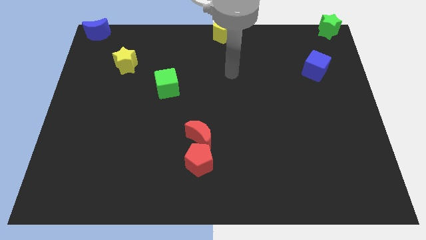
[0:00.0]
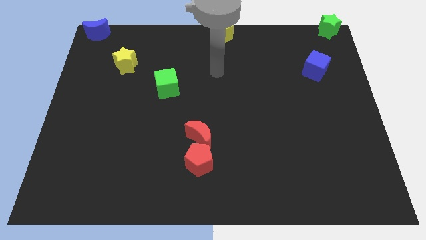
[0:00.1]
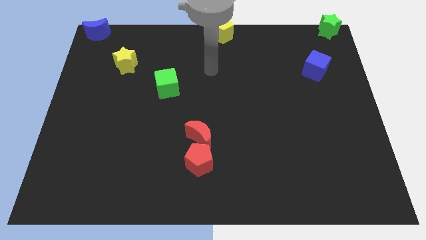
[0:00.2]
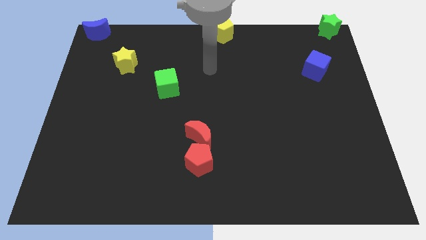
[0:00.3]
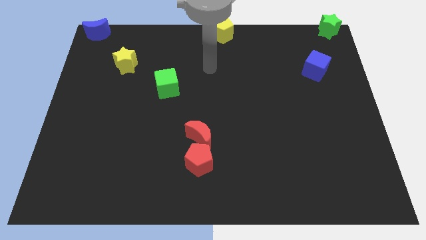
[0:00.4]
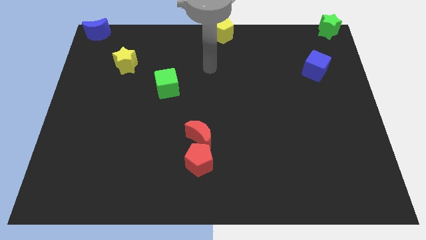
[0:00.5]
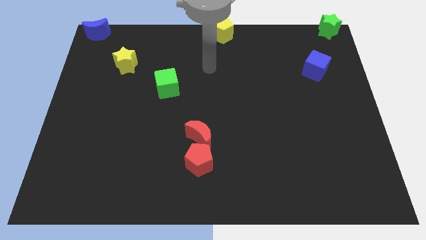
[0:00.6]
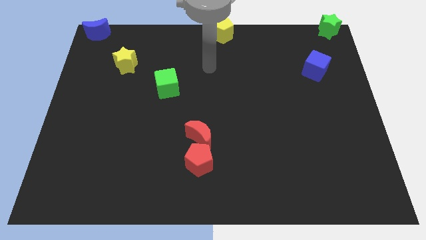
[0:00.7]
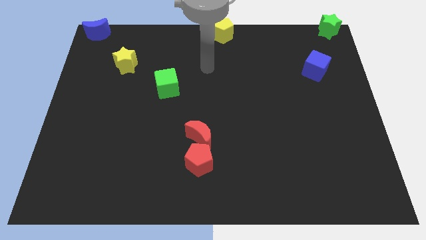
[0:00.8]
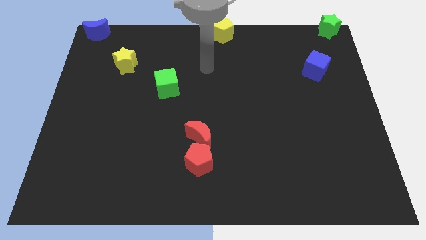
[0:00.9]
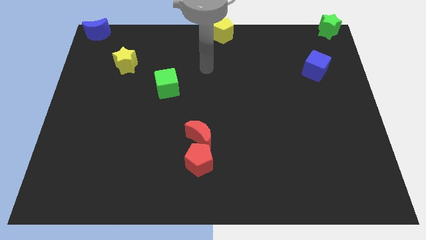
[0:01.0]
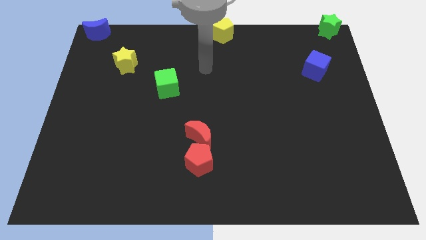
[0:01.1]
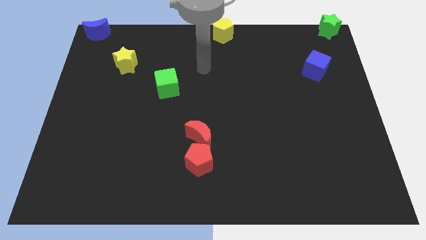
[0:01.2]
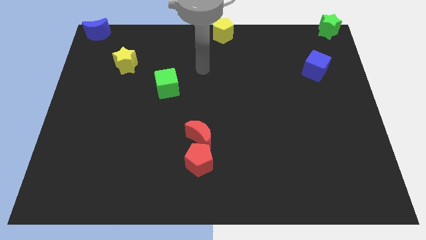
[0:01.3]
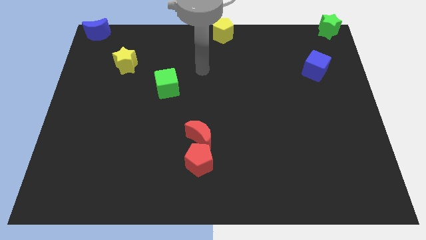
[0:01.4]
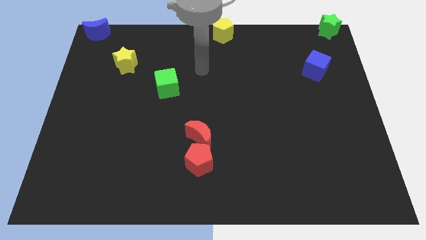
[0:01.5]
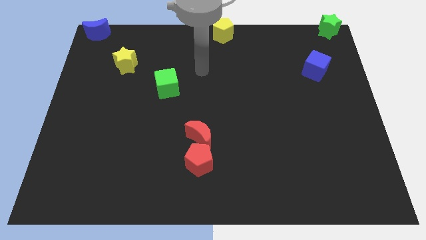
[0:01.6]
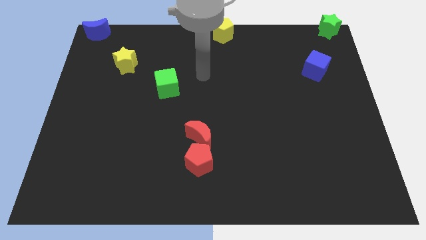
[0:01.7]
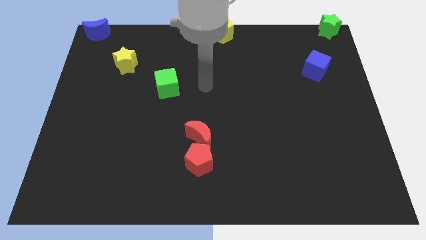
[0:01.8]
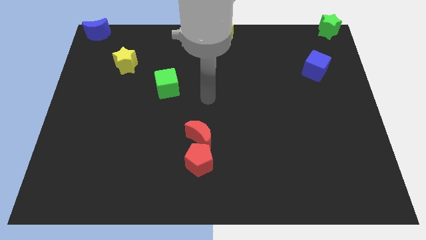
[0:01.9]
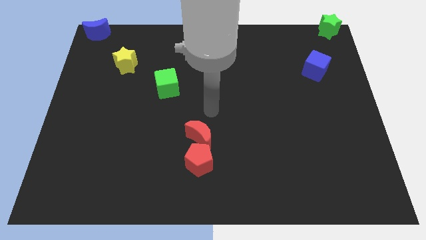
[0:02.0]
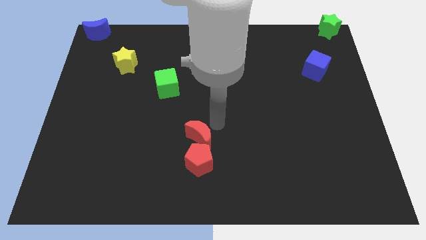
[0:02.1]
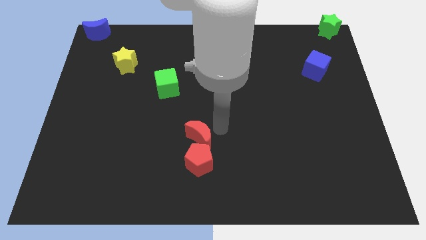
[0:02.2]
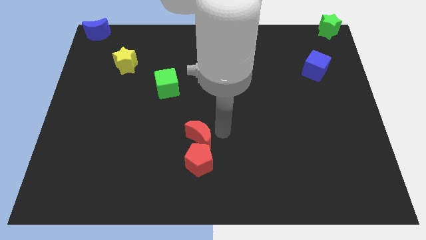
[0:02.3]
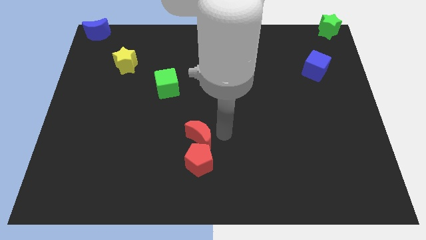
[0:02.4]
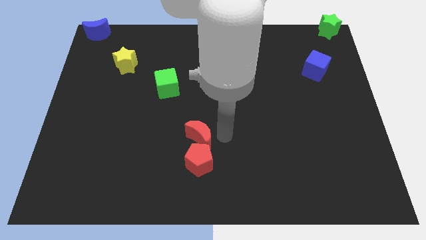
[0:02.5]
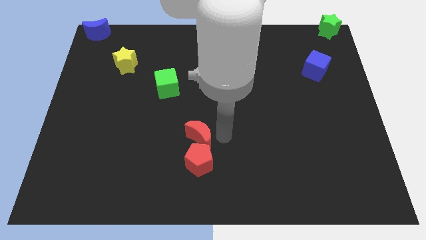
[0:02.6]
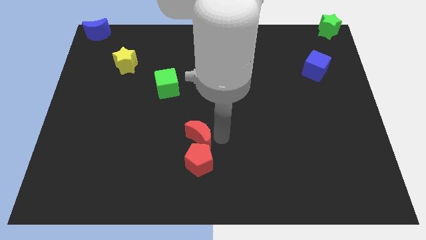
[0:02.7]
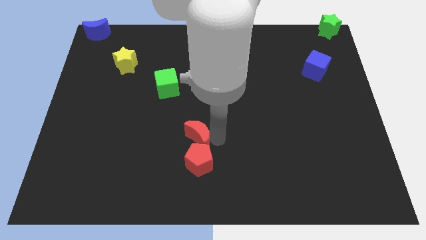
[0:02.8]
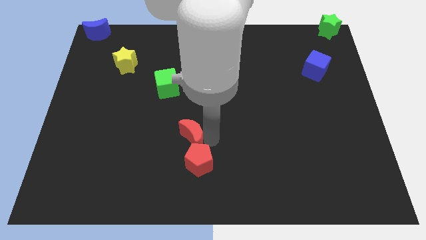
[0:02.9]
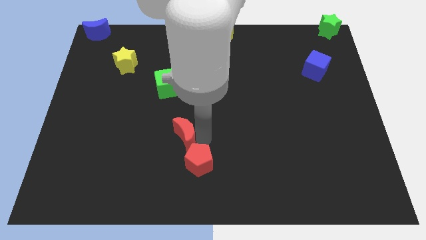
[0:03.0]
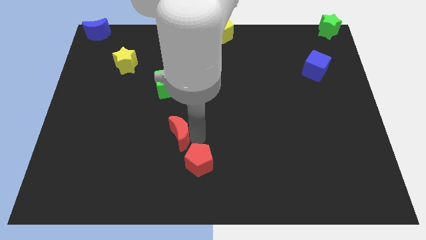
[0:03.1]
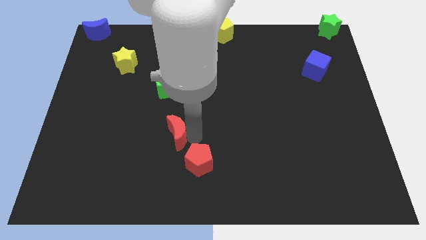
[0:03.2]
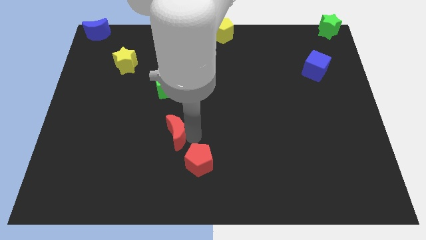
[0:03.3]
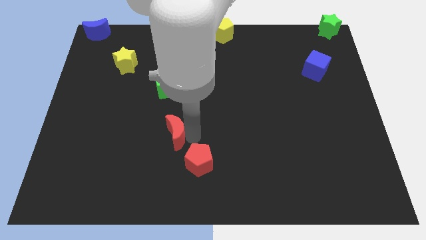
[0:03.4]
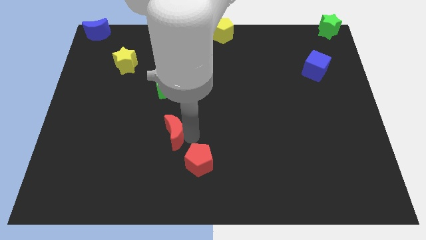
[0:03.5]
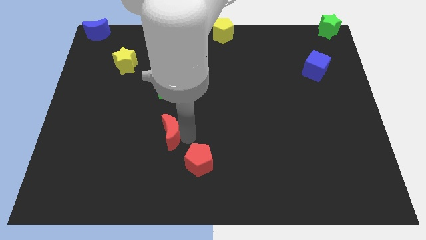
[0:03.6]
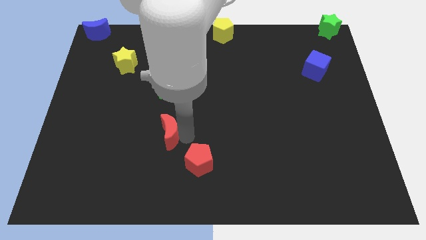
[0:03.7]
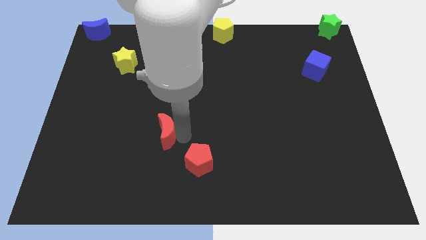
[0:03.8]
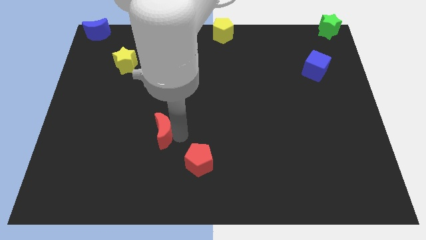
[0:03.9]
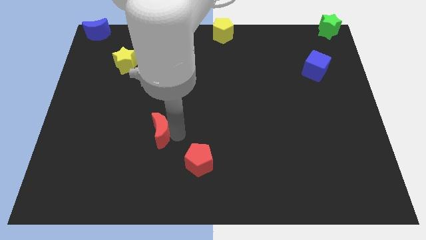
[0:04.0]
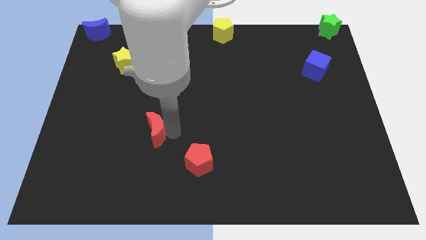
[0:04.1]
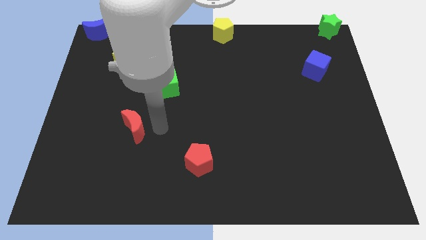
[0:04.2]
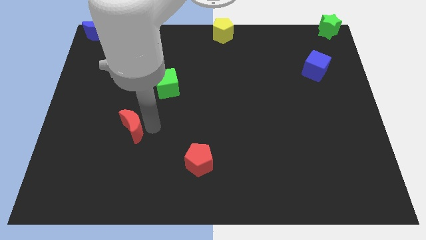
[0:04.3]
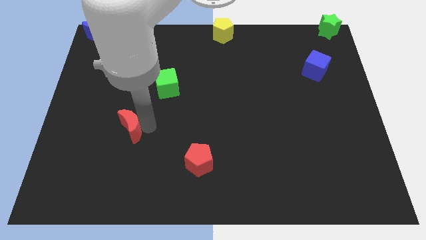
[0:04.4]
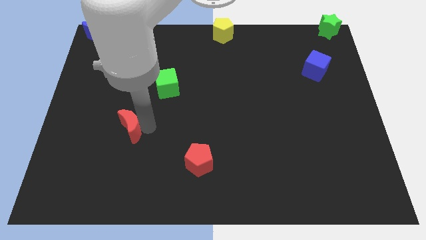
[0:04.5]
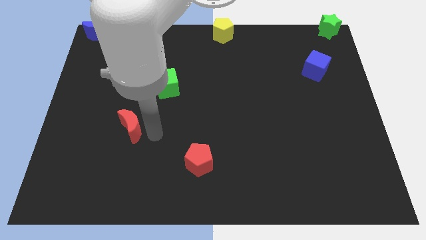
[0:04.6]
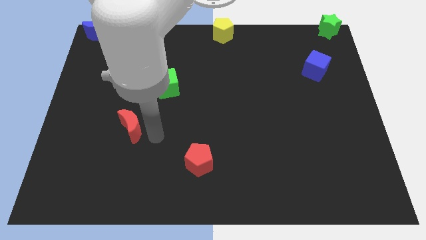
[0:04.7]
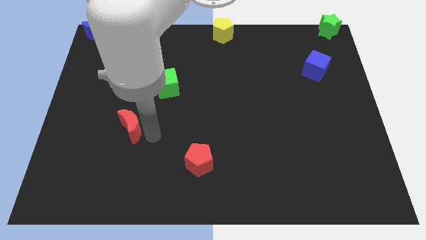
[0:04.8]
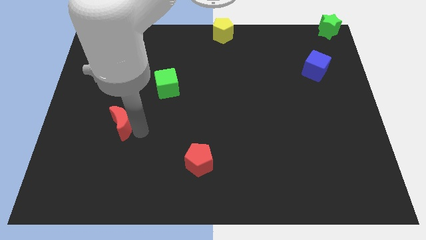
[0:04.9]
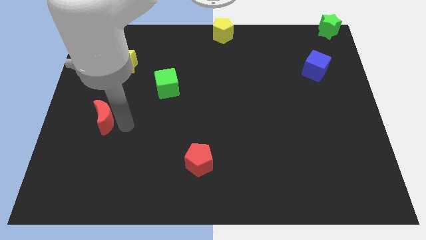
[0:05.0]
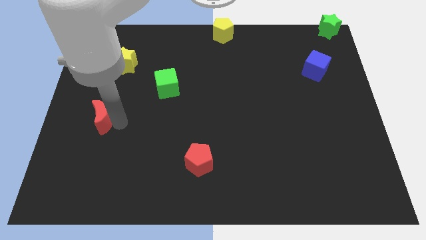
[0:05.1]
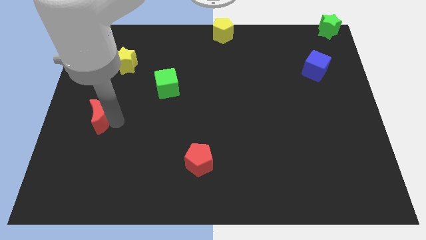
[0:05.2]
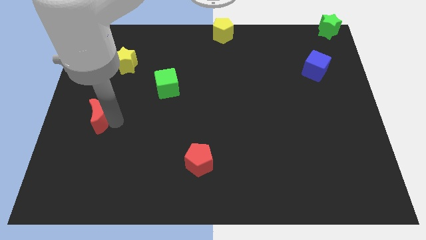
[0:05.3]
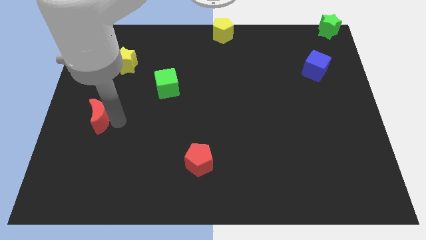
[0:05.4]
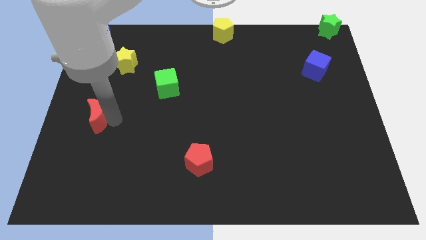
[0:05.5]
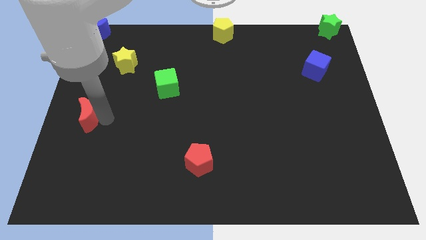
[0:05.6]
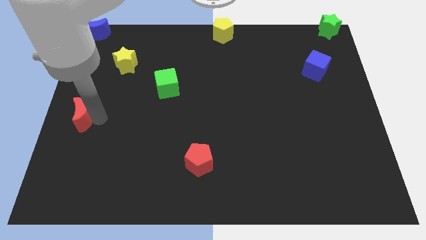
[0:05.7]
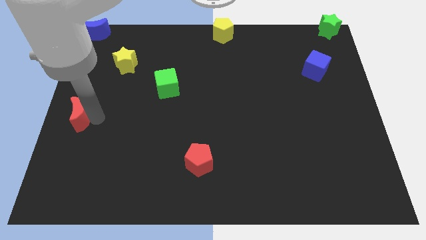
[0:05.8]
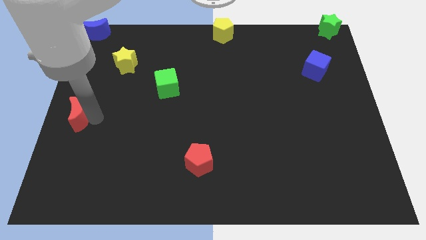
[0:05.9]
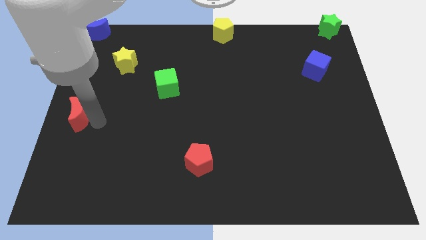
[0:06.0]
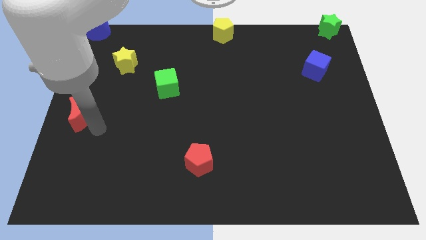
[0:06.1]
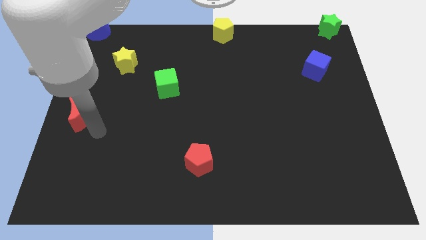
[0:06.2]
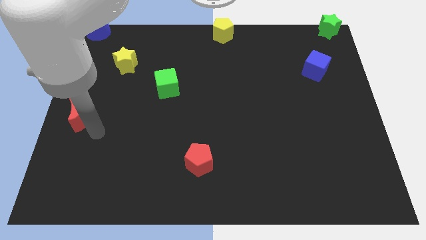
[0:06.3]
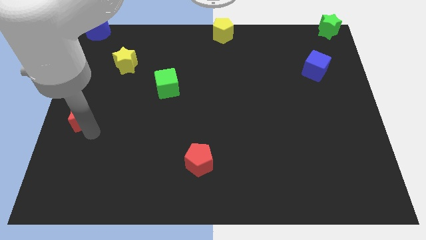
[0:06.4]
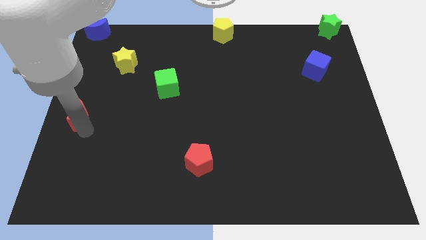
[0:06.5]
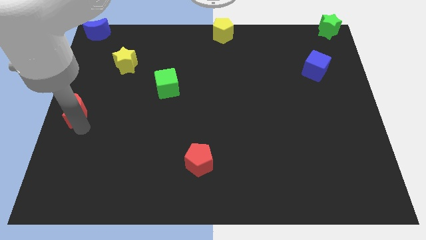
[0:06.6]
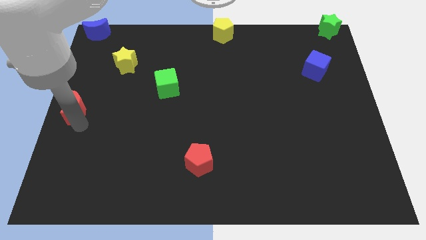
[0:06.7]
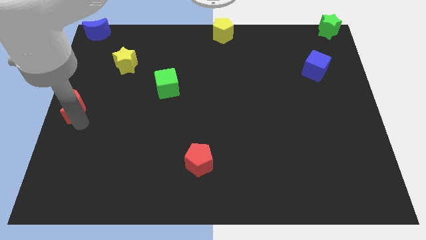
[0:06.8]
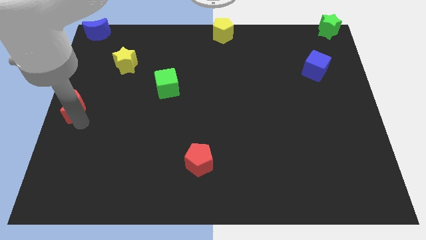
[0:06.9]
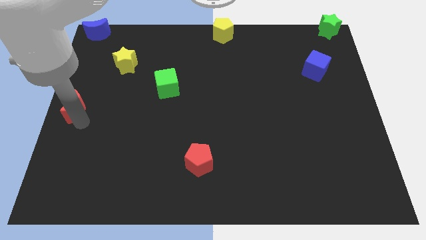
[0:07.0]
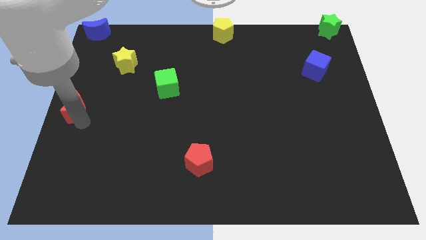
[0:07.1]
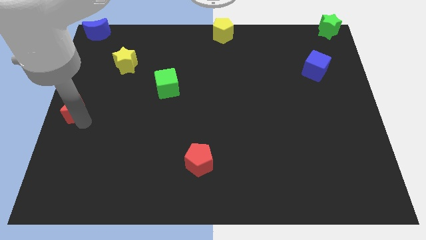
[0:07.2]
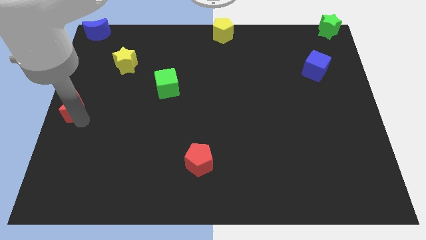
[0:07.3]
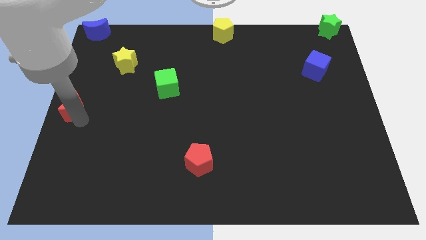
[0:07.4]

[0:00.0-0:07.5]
push the red crescent towards the left center

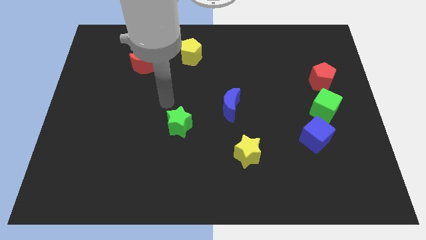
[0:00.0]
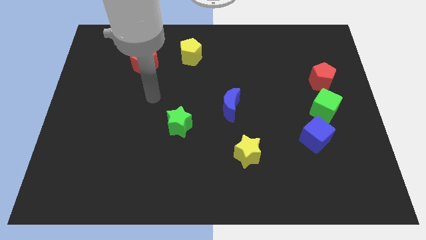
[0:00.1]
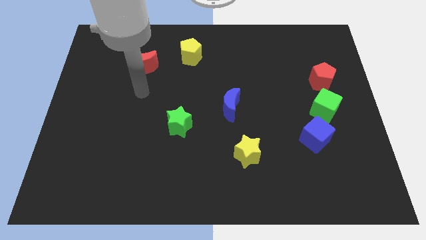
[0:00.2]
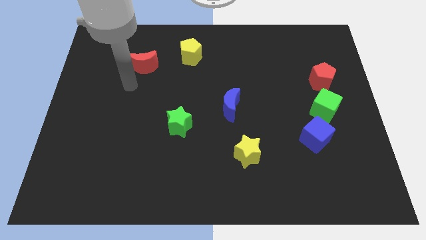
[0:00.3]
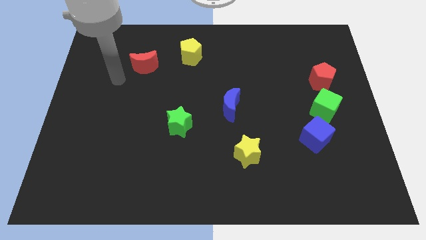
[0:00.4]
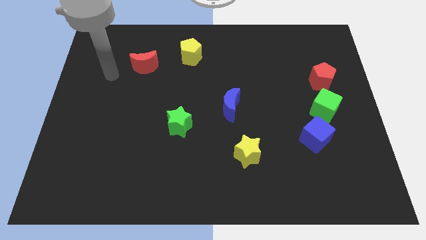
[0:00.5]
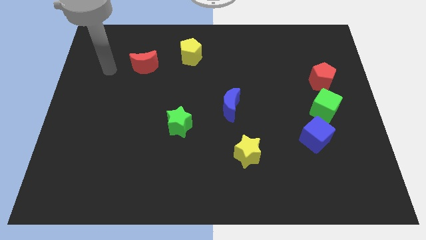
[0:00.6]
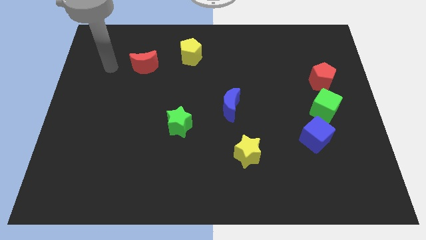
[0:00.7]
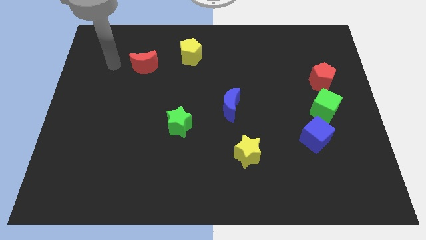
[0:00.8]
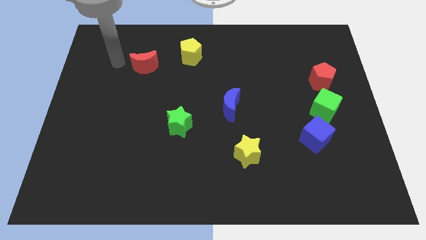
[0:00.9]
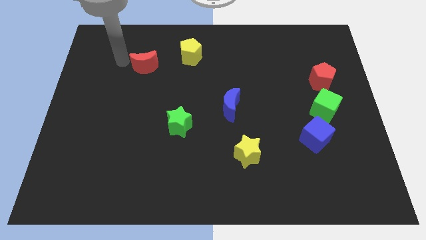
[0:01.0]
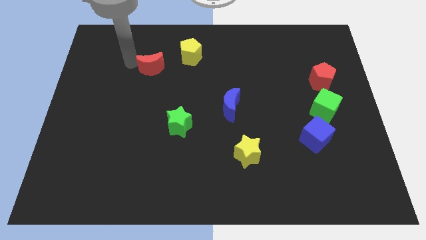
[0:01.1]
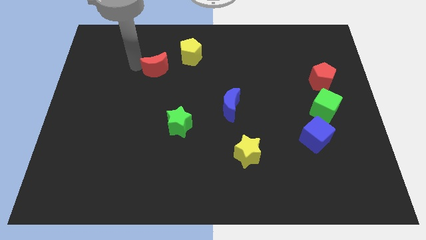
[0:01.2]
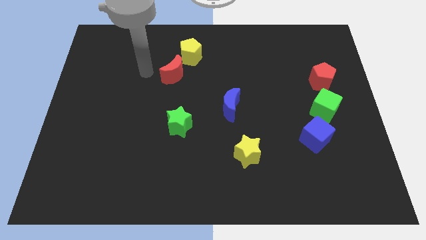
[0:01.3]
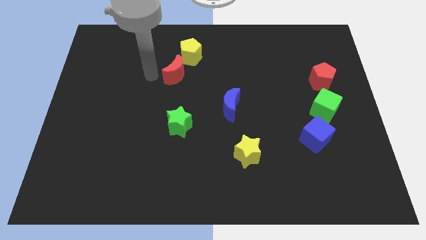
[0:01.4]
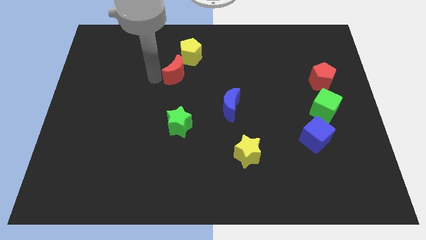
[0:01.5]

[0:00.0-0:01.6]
push the red crescent to the bottom left side of the yellow pentagon
